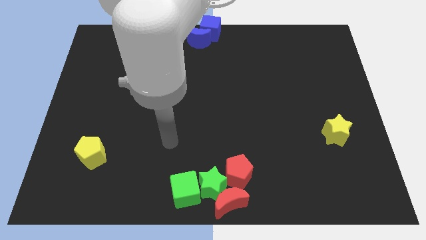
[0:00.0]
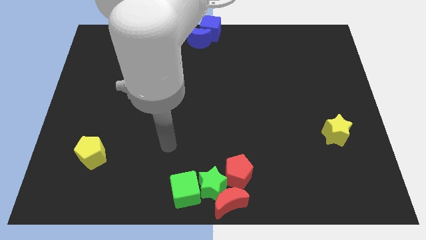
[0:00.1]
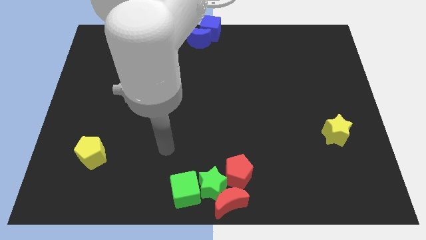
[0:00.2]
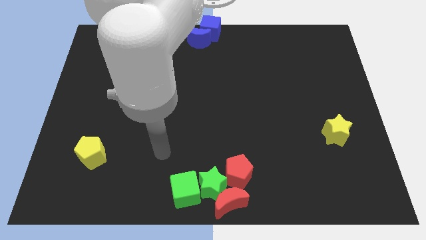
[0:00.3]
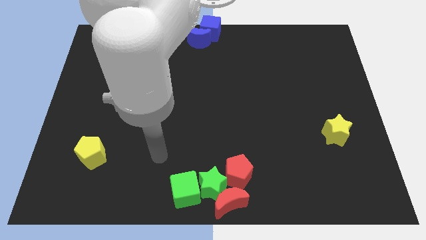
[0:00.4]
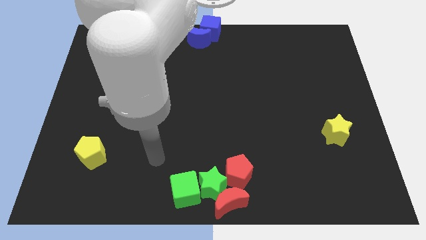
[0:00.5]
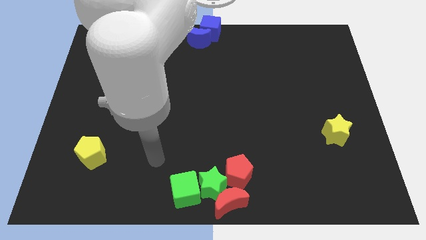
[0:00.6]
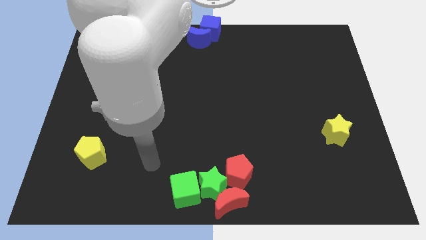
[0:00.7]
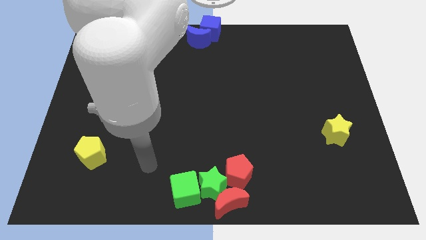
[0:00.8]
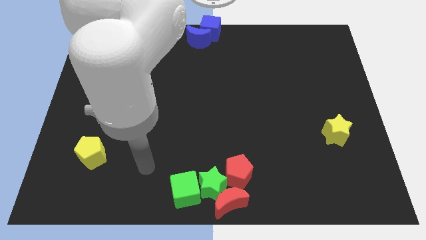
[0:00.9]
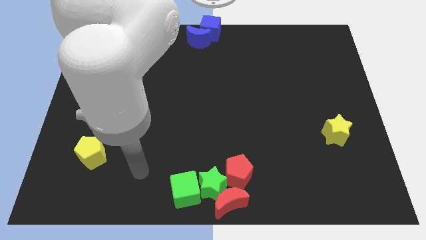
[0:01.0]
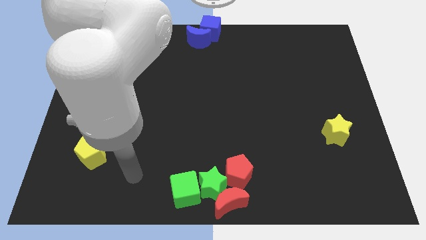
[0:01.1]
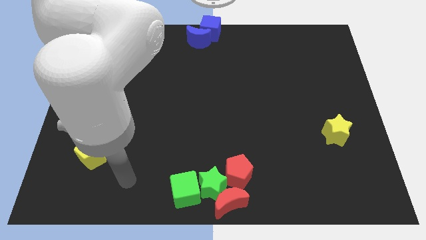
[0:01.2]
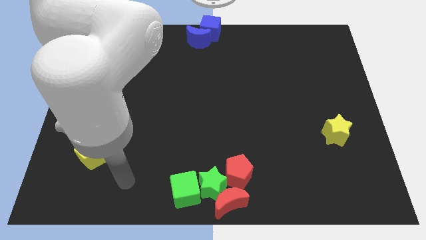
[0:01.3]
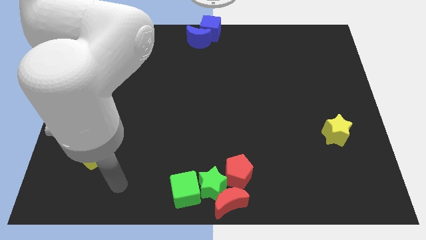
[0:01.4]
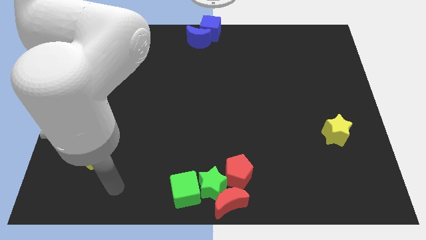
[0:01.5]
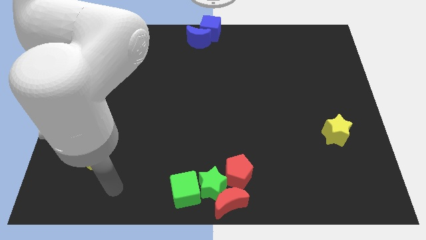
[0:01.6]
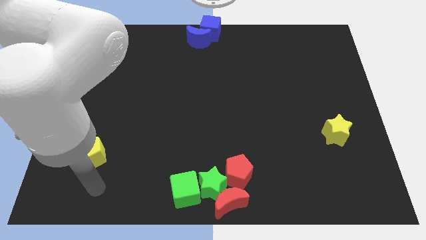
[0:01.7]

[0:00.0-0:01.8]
point your arm at the bottom side of the yellow pentagon

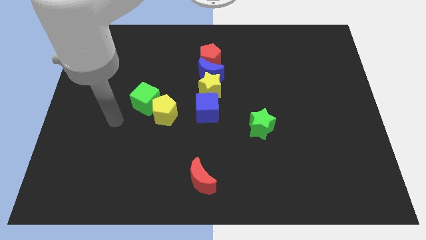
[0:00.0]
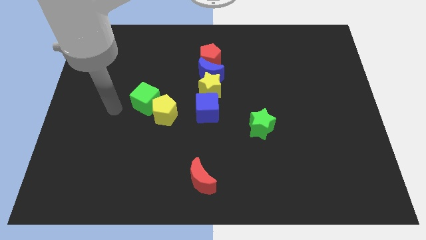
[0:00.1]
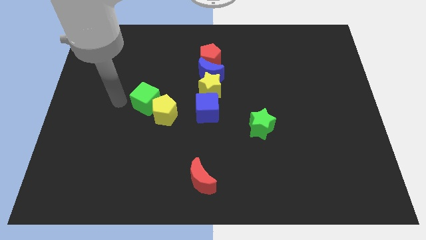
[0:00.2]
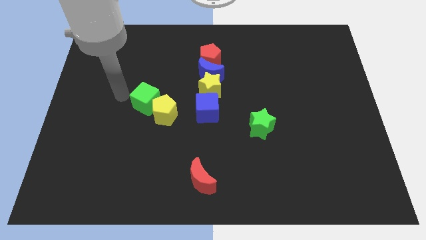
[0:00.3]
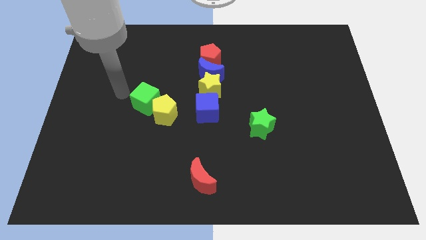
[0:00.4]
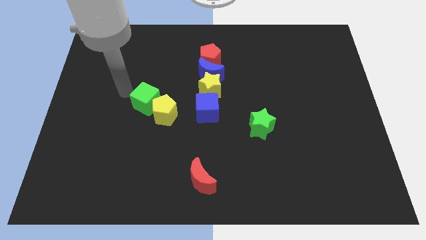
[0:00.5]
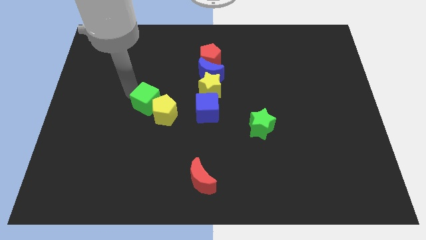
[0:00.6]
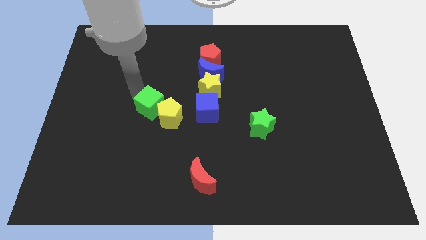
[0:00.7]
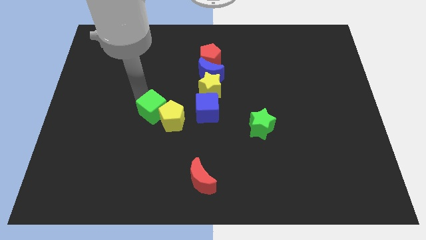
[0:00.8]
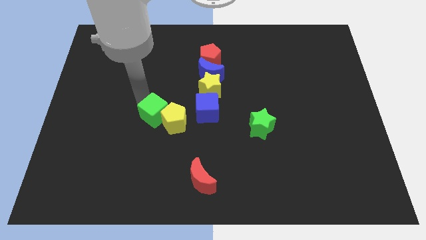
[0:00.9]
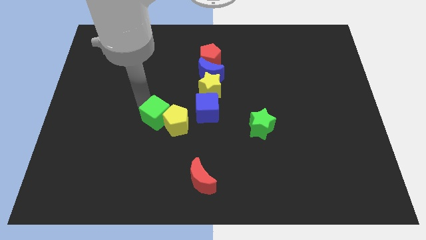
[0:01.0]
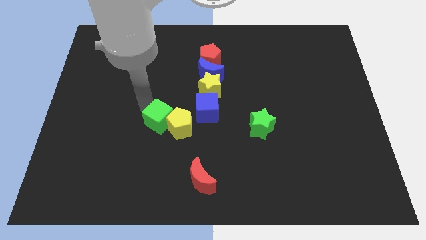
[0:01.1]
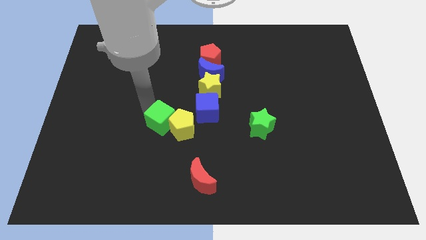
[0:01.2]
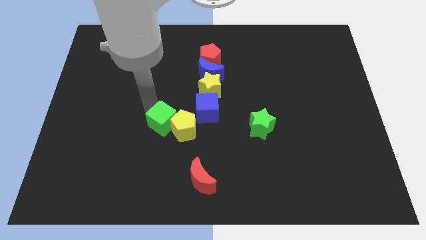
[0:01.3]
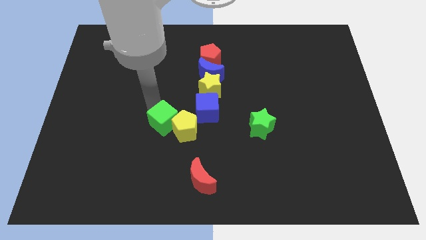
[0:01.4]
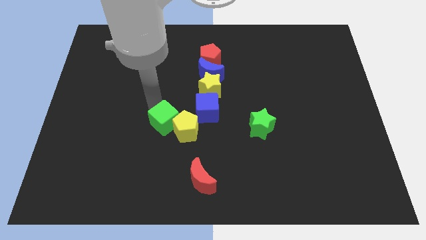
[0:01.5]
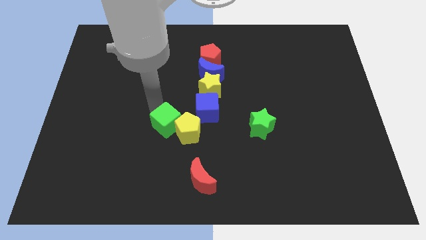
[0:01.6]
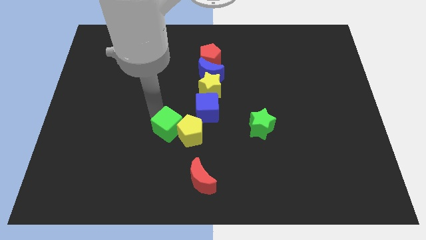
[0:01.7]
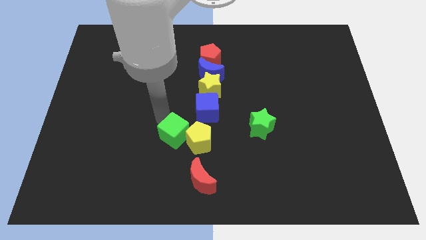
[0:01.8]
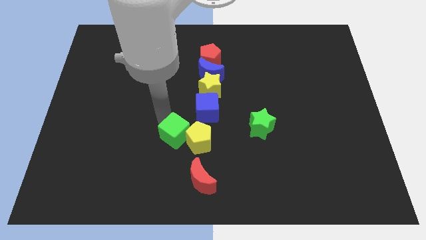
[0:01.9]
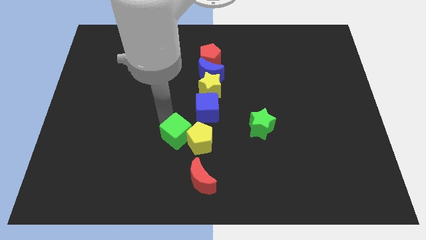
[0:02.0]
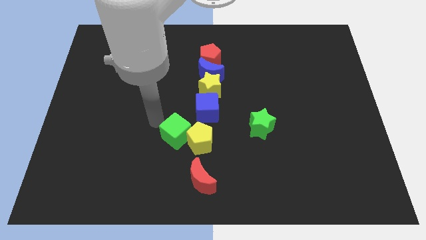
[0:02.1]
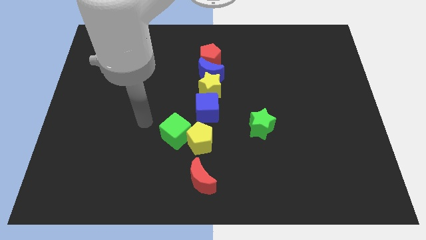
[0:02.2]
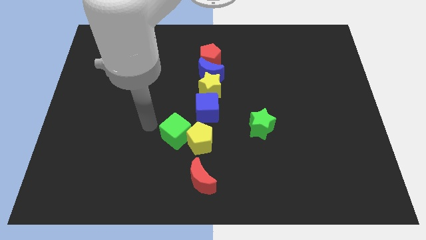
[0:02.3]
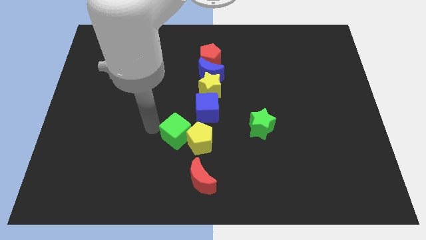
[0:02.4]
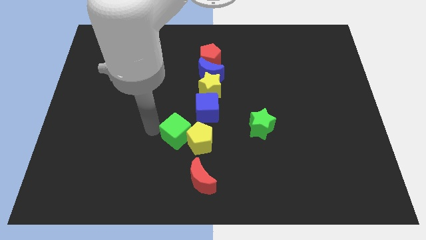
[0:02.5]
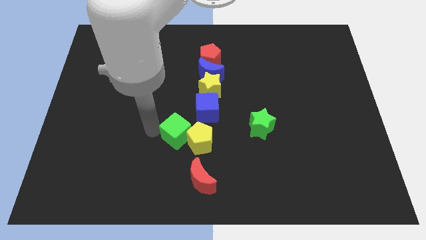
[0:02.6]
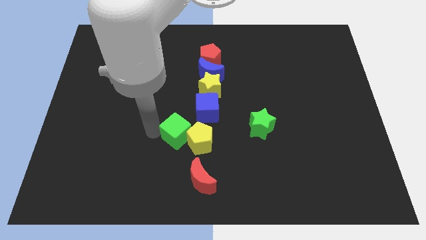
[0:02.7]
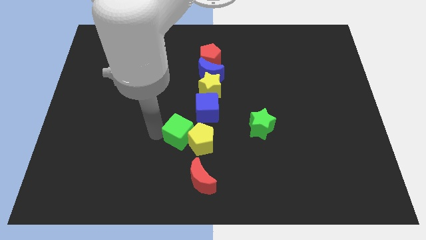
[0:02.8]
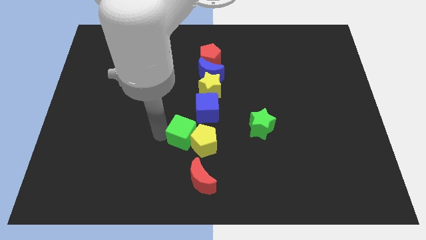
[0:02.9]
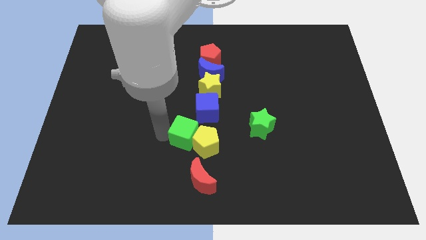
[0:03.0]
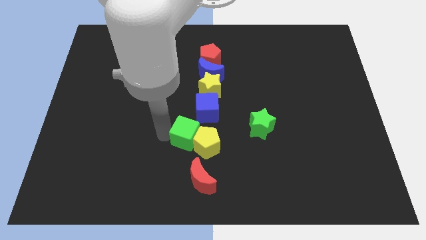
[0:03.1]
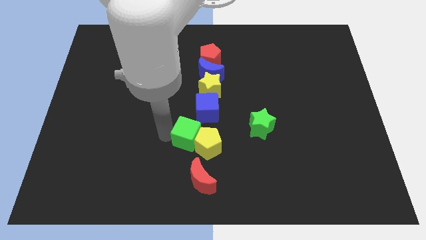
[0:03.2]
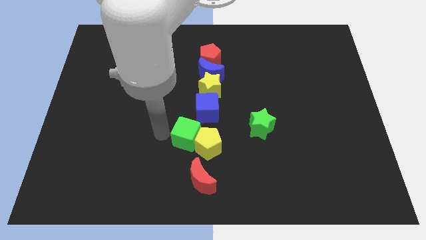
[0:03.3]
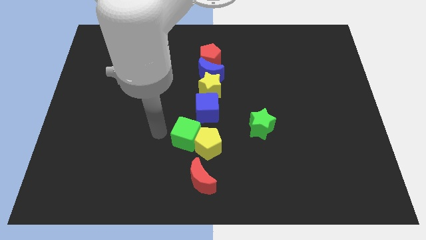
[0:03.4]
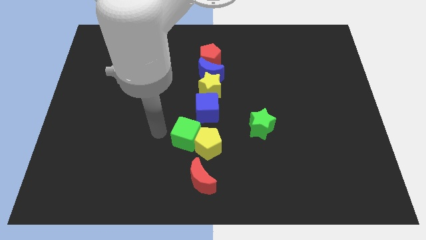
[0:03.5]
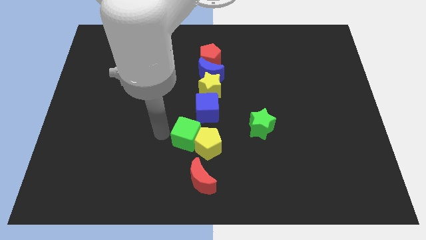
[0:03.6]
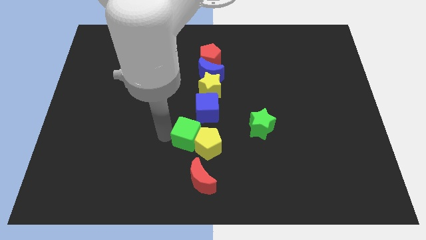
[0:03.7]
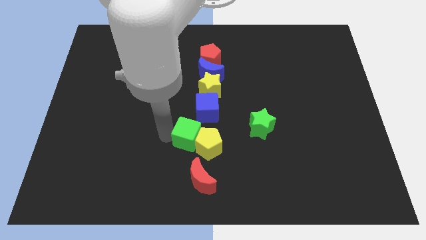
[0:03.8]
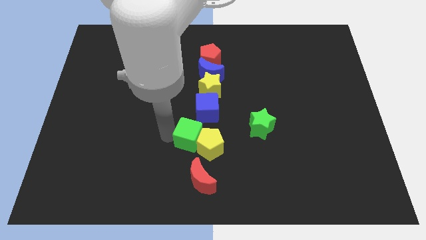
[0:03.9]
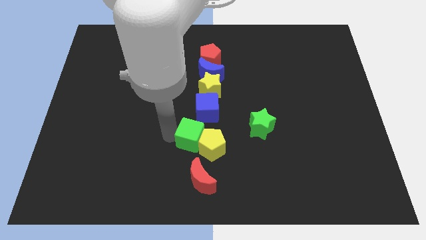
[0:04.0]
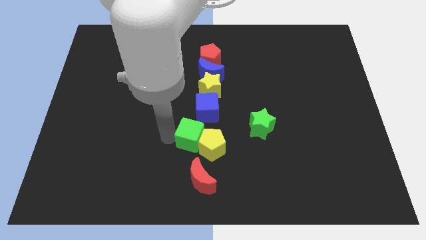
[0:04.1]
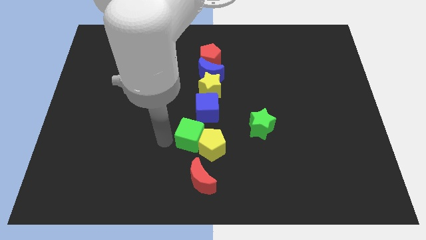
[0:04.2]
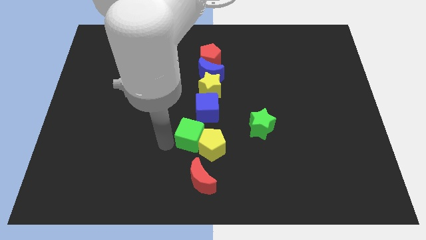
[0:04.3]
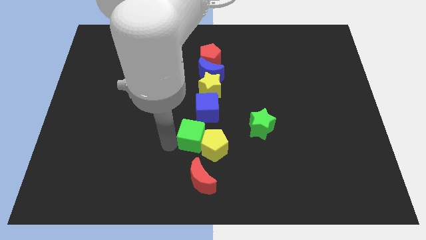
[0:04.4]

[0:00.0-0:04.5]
push the green cube along with the yellow pentagon parallel to the blue cube

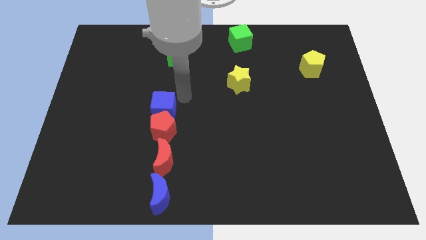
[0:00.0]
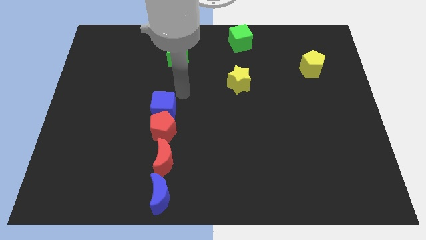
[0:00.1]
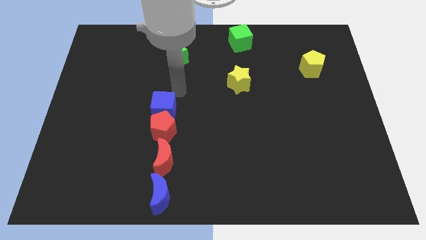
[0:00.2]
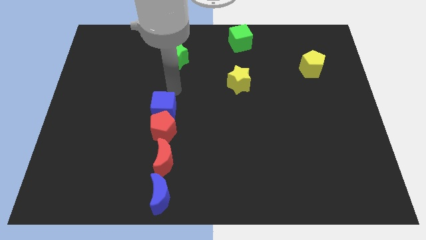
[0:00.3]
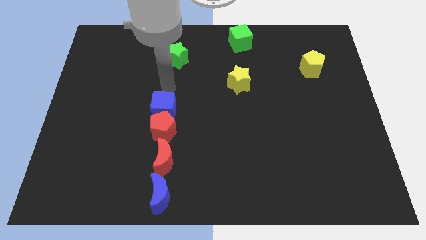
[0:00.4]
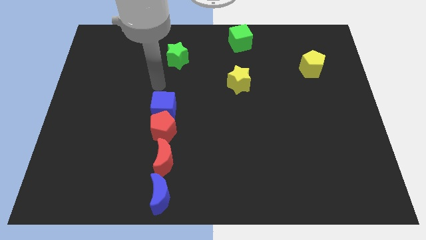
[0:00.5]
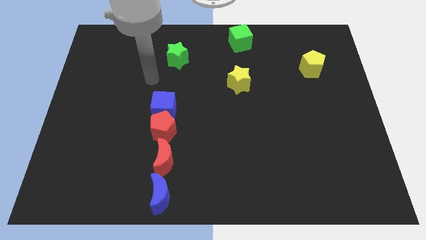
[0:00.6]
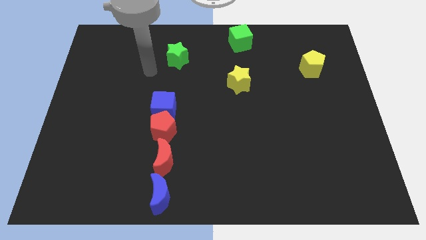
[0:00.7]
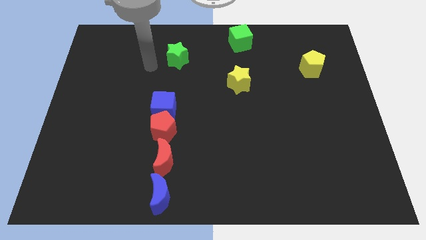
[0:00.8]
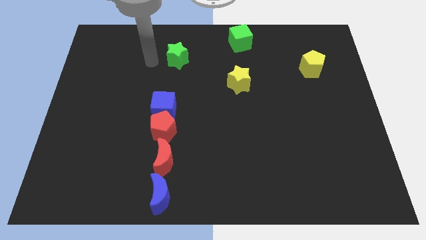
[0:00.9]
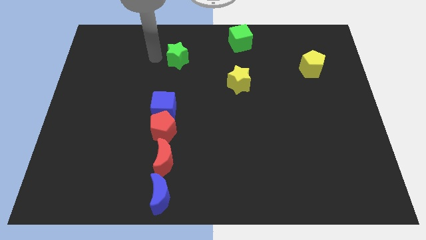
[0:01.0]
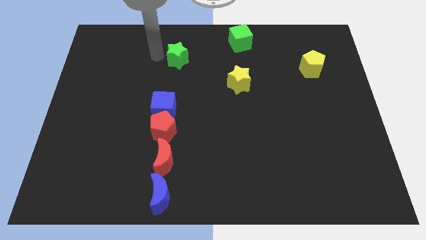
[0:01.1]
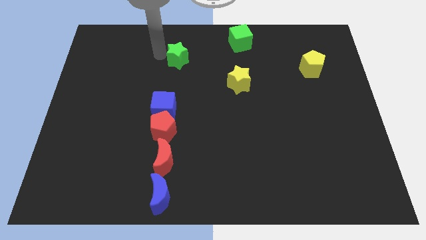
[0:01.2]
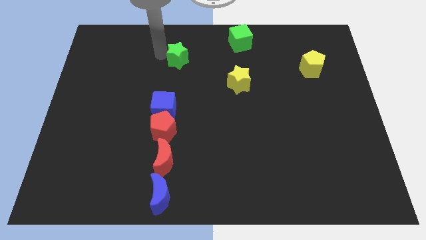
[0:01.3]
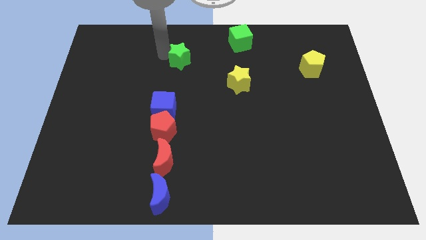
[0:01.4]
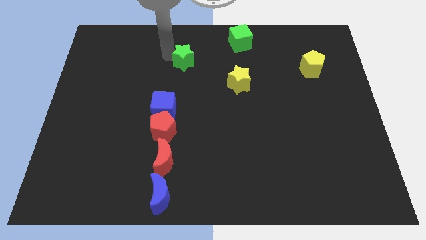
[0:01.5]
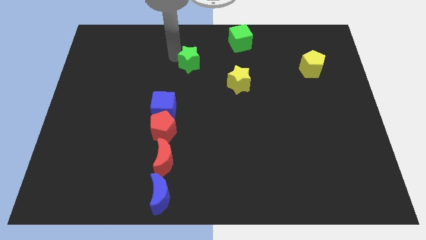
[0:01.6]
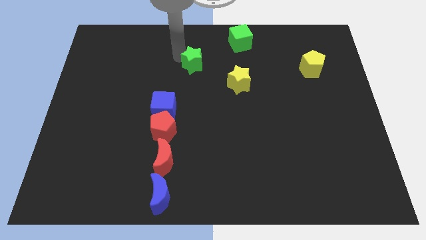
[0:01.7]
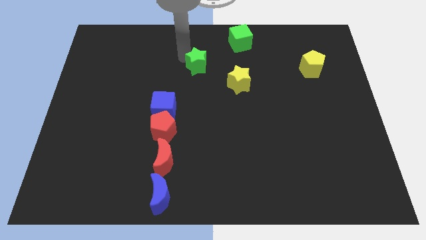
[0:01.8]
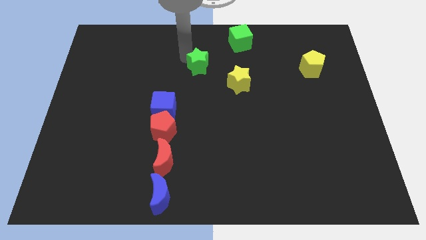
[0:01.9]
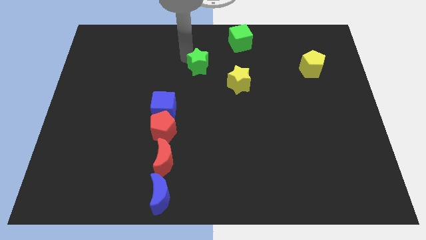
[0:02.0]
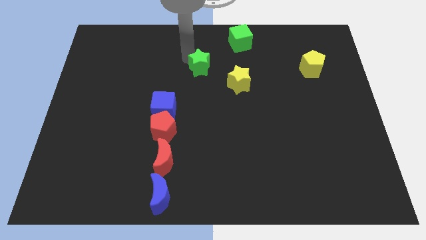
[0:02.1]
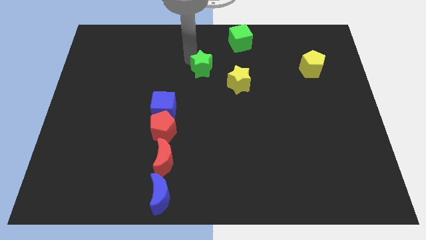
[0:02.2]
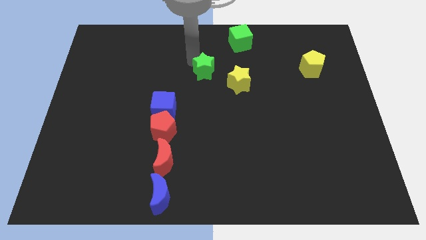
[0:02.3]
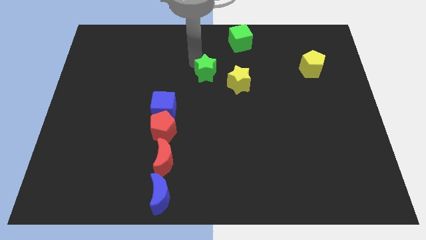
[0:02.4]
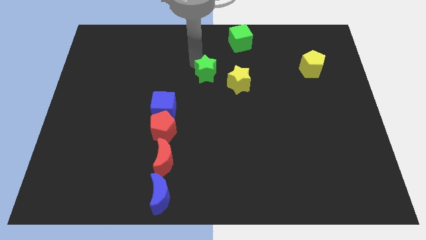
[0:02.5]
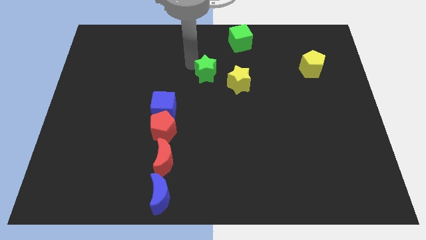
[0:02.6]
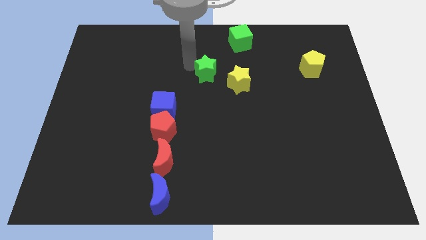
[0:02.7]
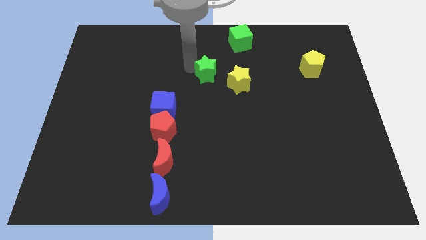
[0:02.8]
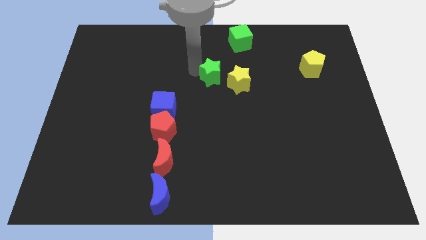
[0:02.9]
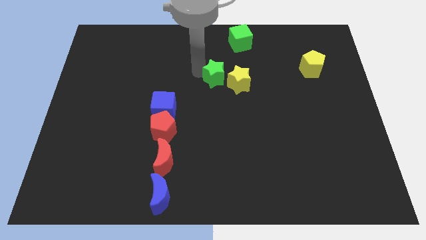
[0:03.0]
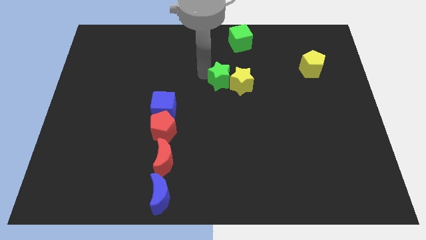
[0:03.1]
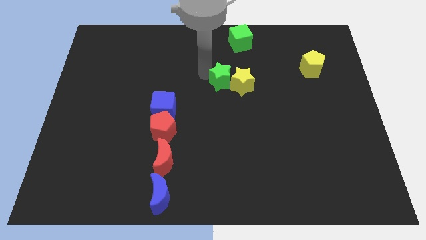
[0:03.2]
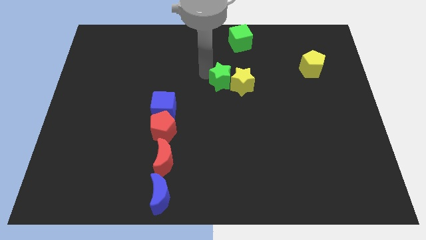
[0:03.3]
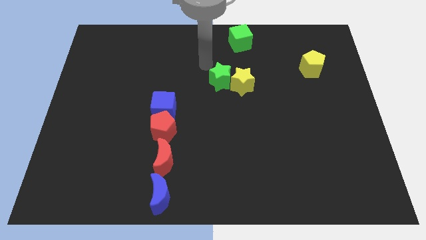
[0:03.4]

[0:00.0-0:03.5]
move the green star into the yellow star
